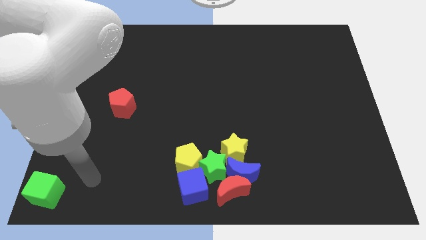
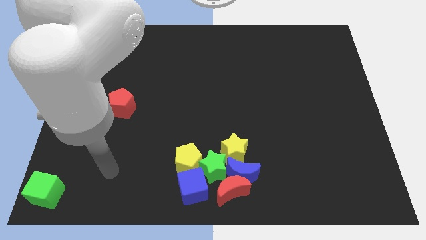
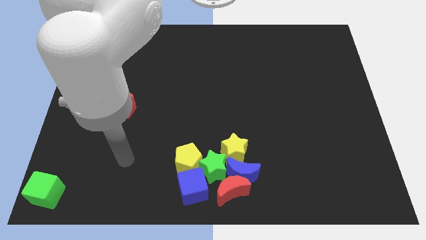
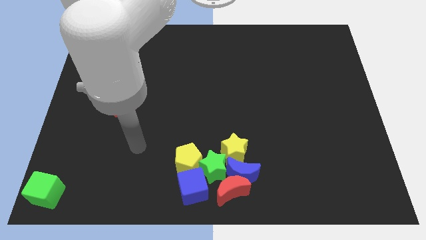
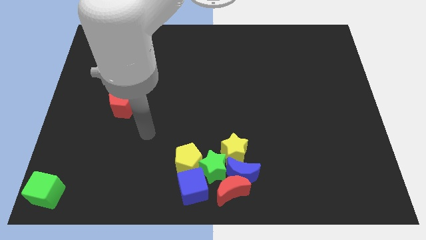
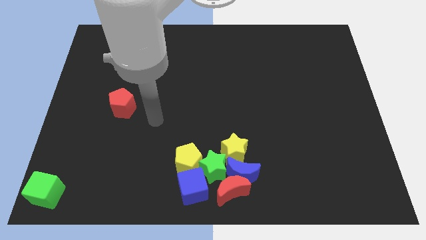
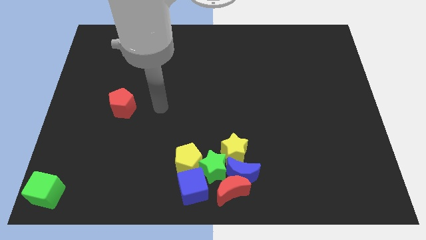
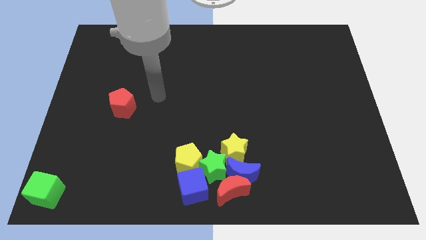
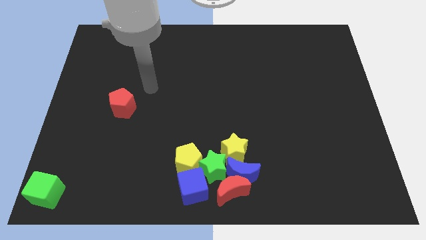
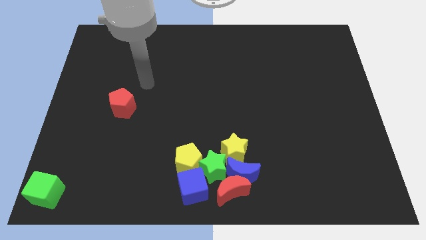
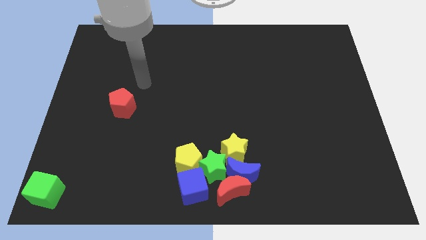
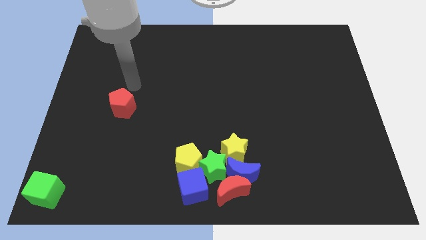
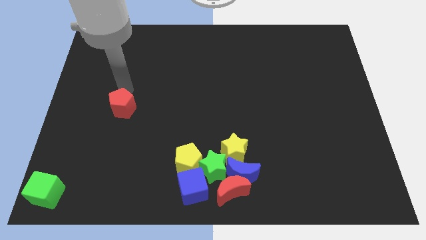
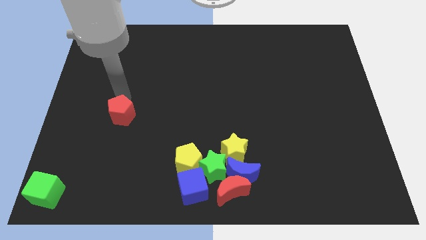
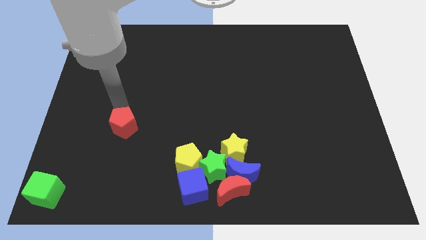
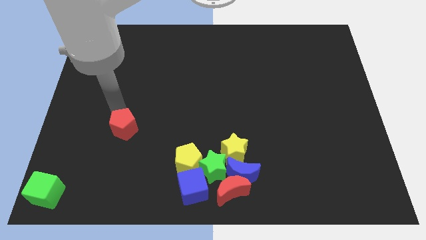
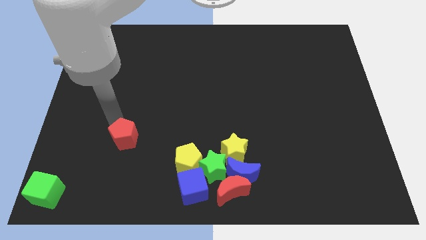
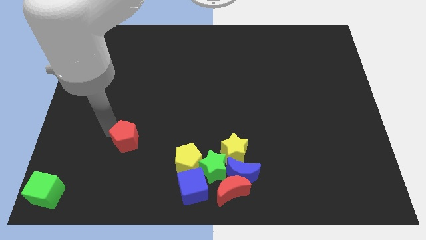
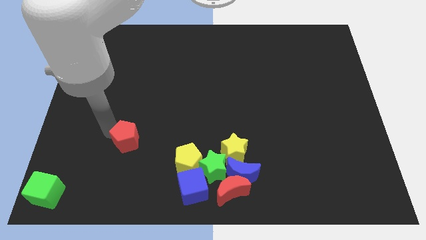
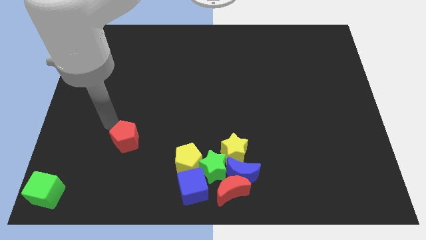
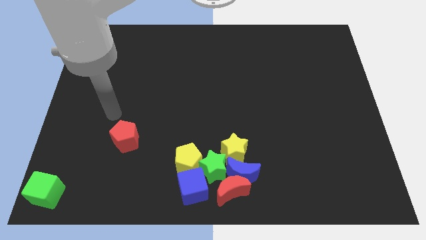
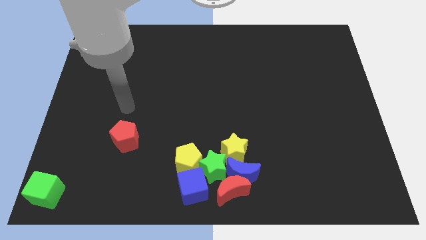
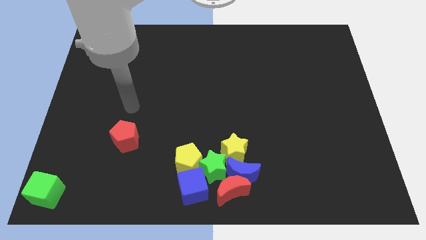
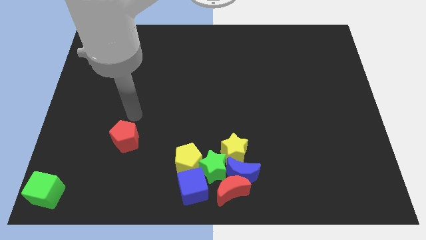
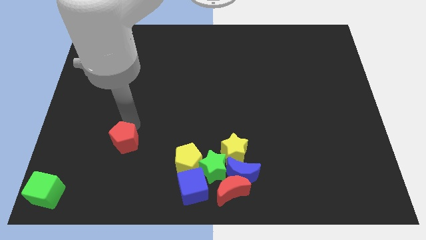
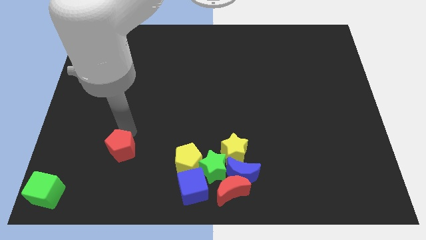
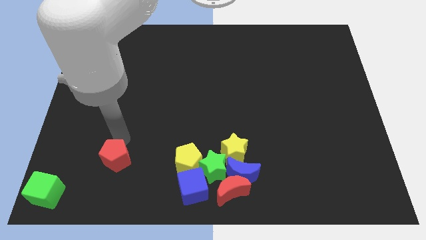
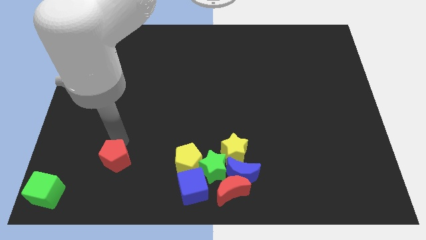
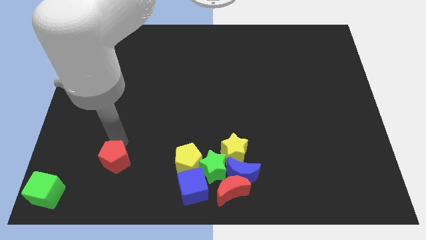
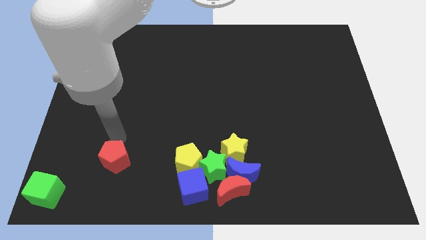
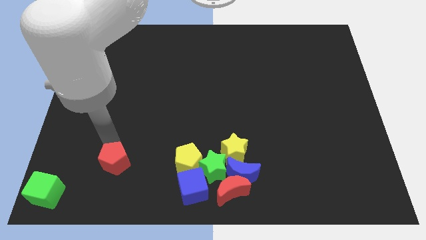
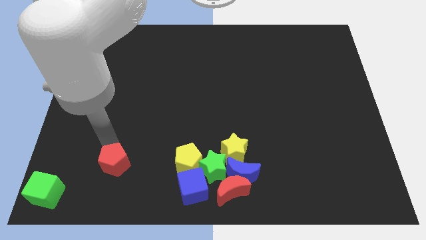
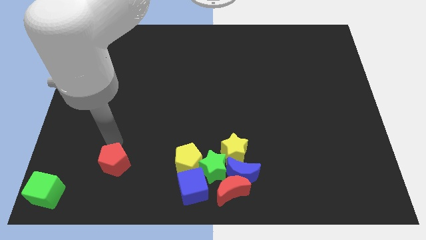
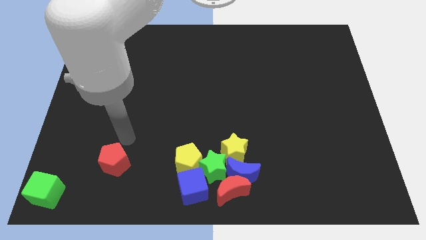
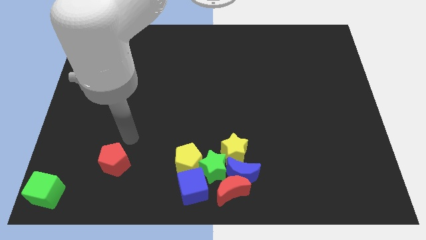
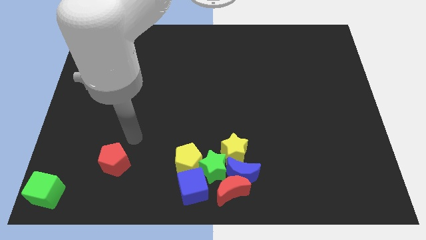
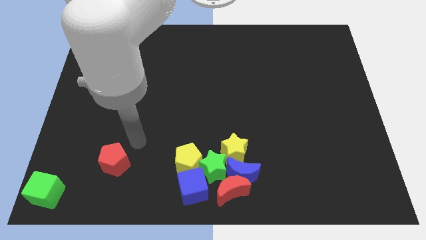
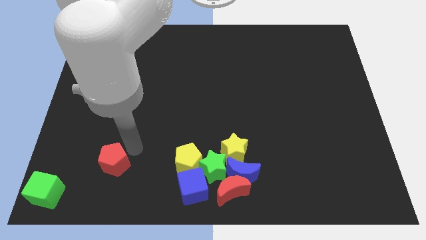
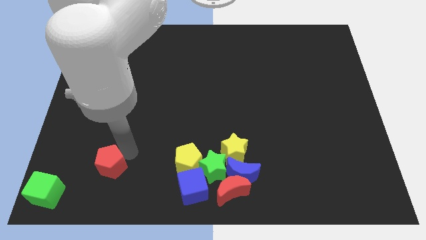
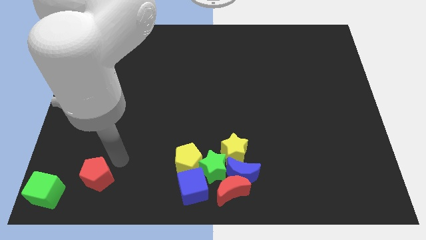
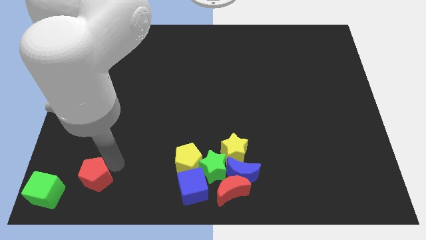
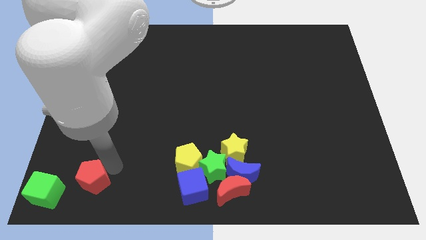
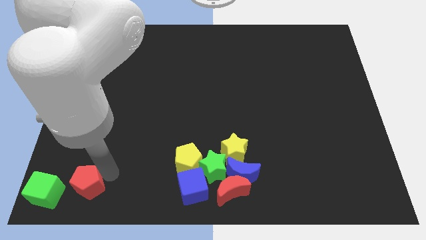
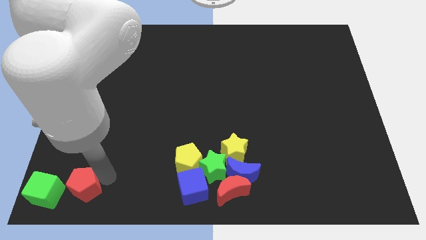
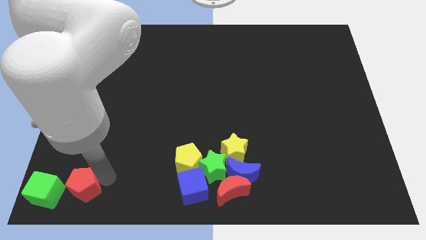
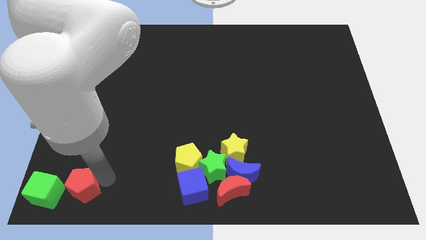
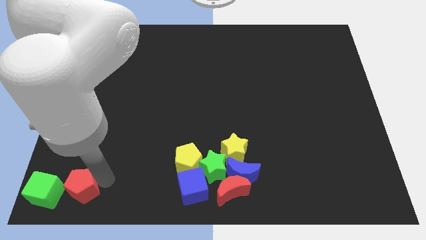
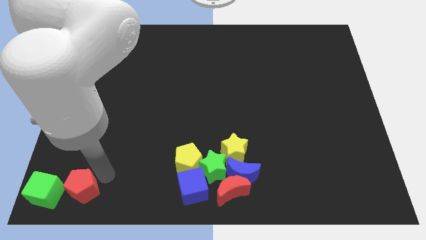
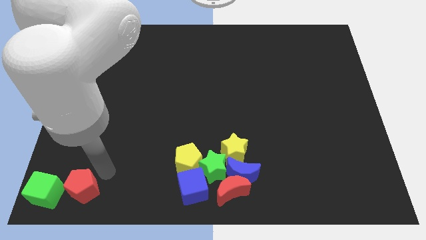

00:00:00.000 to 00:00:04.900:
move the red pentagon close to the green cube

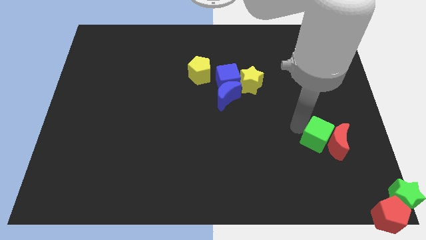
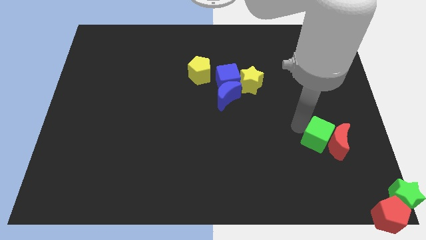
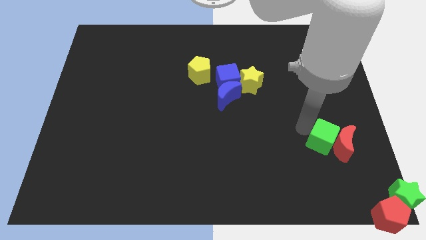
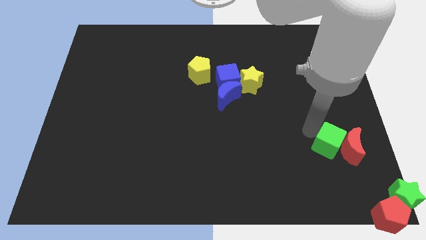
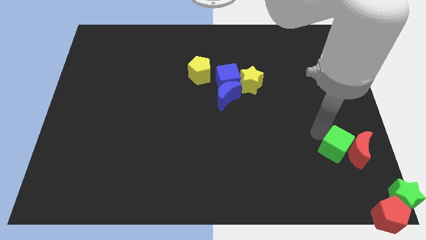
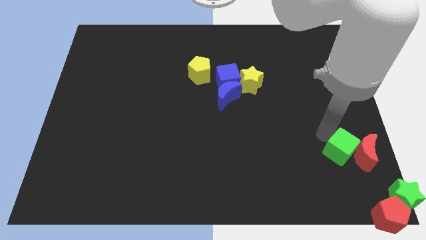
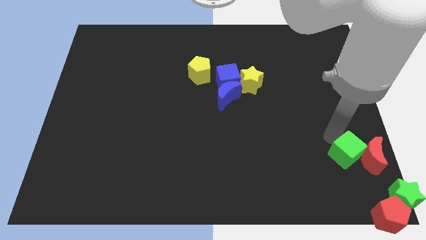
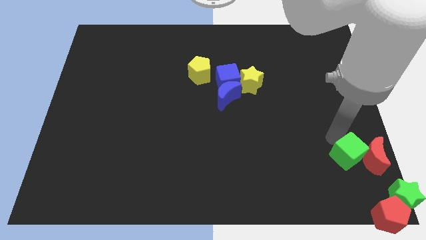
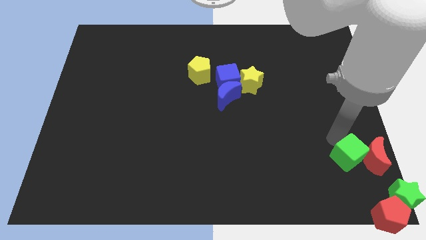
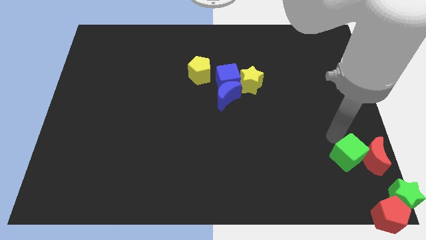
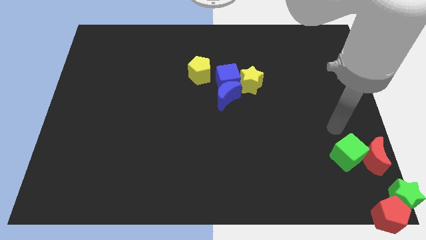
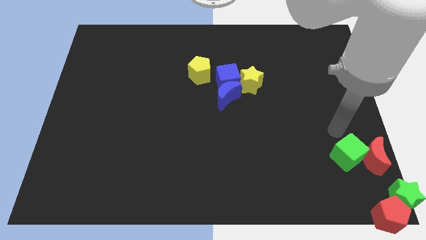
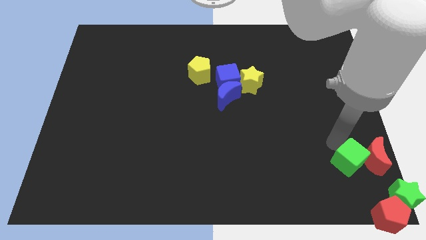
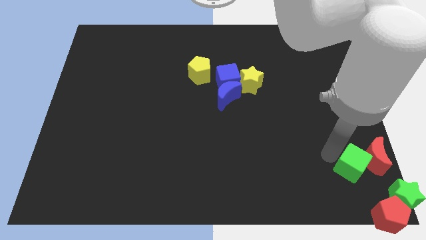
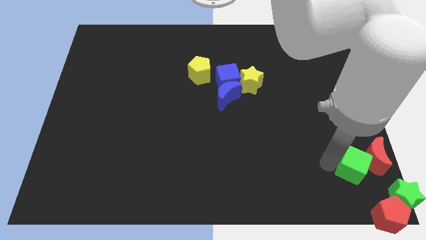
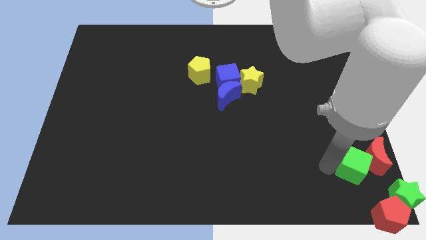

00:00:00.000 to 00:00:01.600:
push the green cube into the red crescent

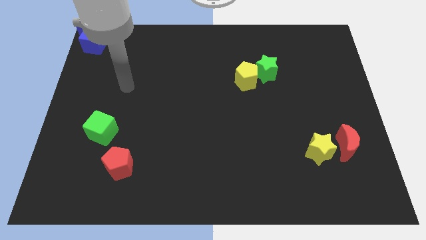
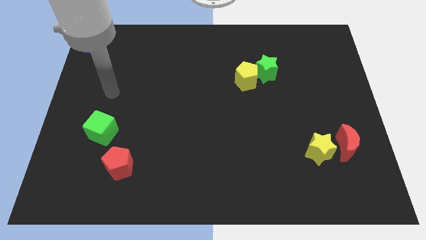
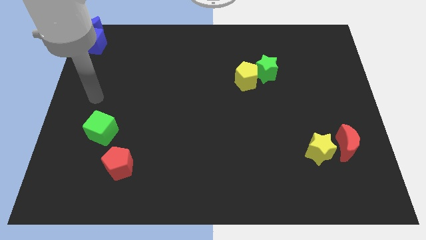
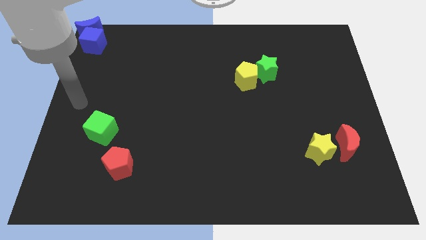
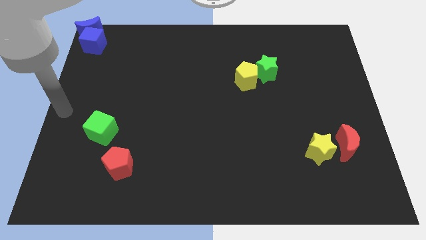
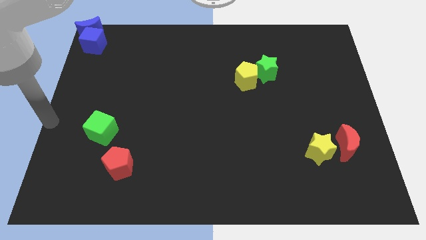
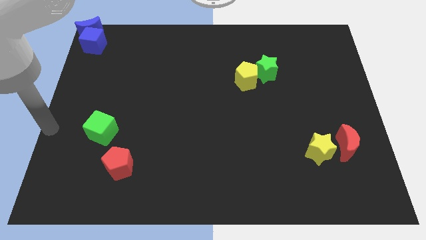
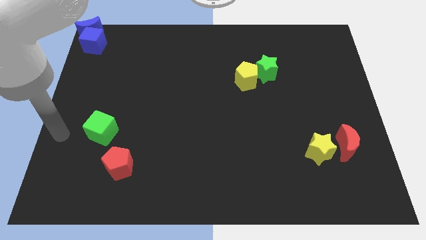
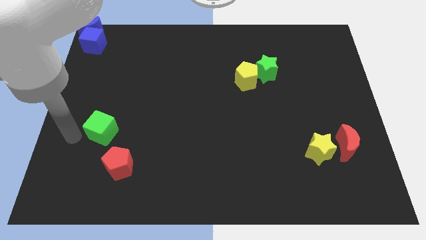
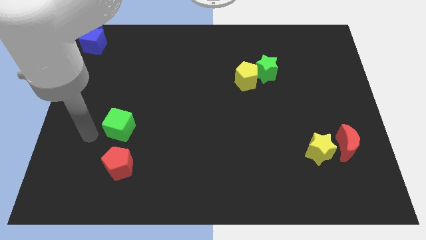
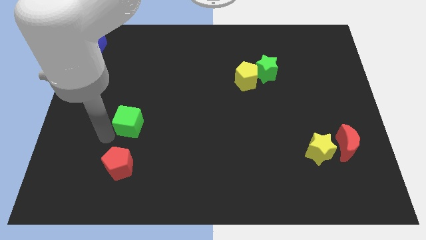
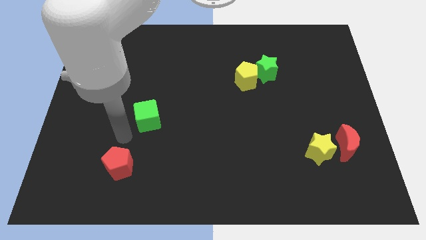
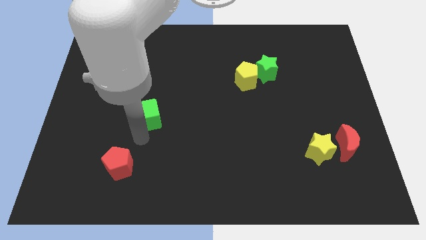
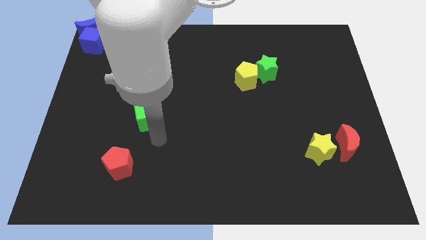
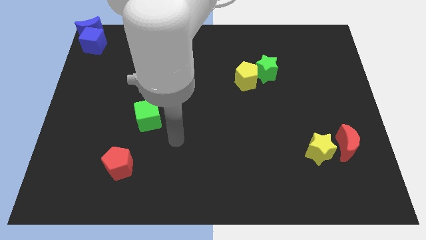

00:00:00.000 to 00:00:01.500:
move green cube on right side

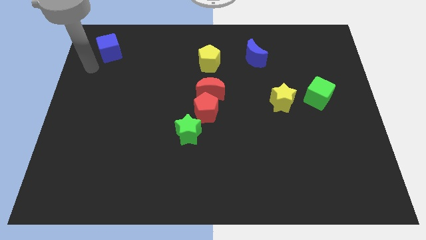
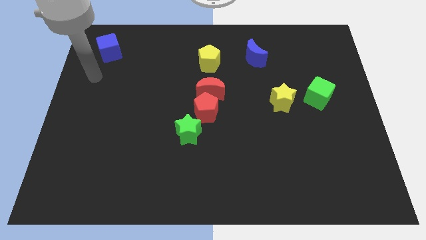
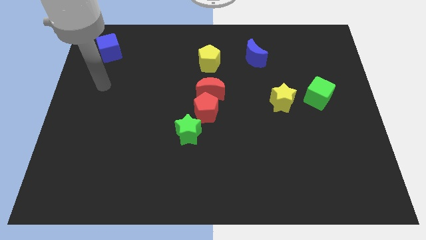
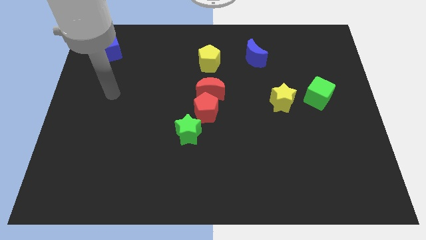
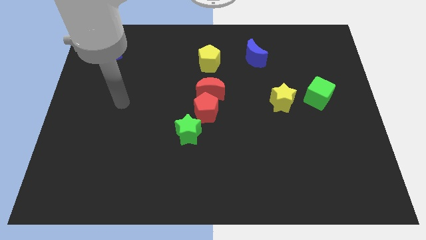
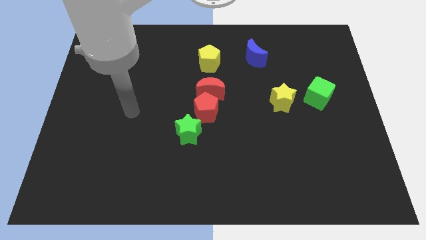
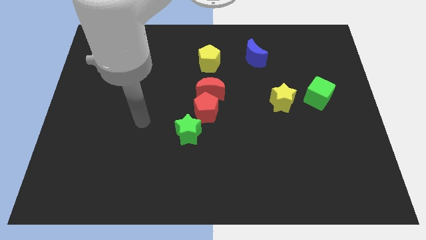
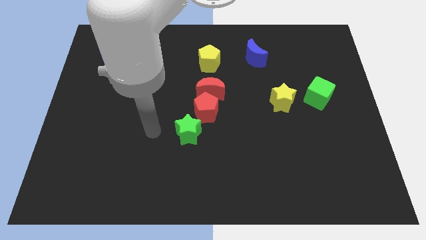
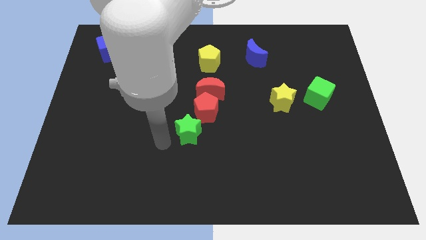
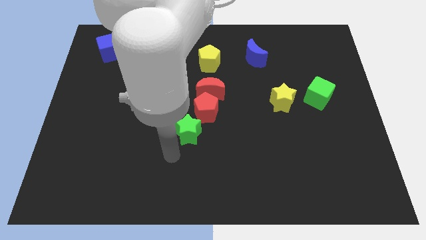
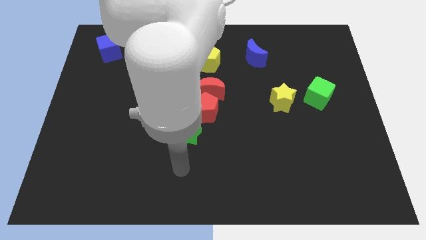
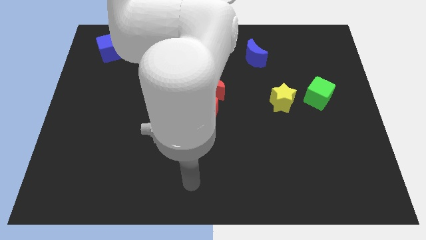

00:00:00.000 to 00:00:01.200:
move the arm diagonally to the bottom middle
